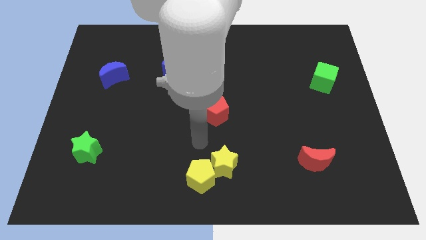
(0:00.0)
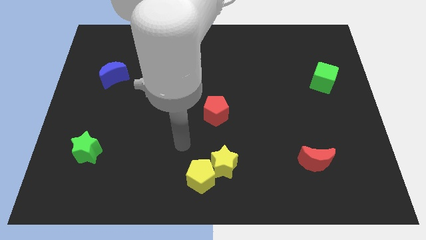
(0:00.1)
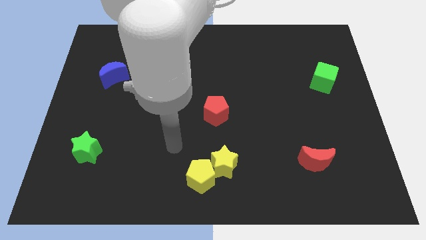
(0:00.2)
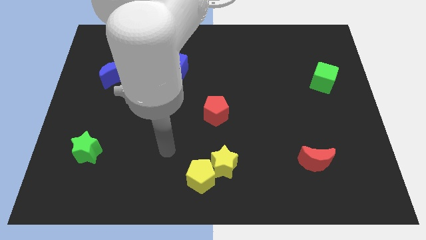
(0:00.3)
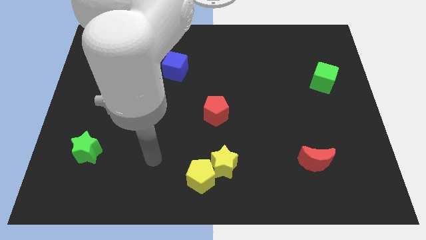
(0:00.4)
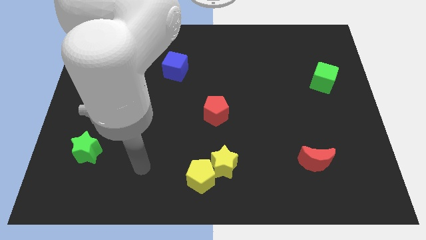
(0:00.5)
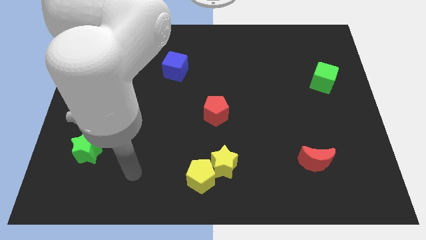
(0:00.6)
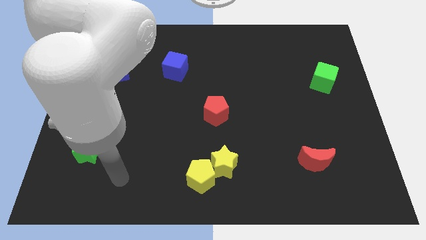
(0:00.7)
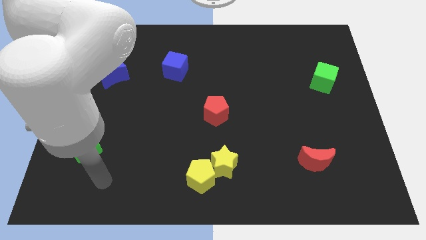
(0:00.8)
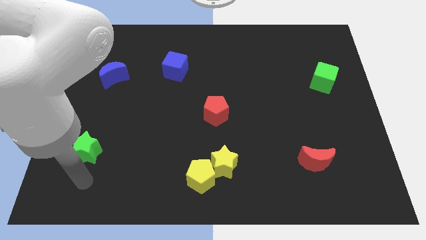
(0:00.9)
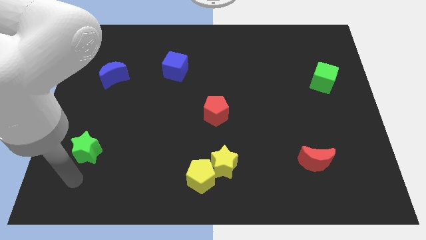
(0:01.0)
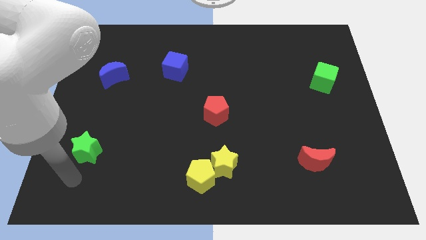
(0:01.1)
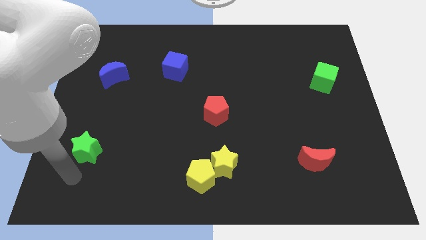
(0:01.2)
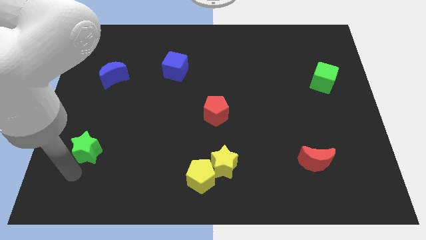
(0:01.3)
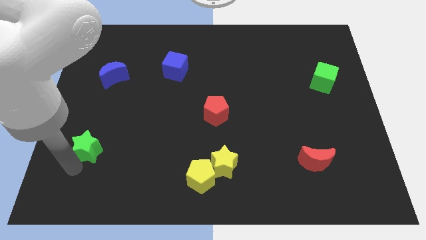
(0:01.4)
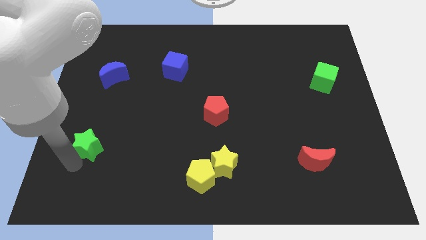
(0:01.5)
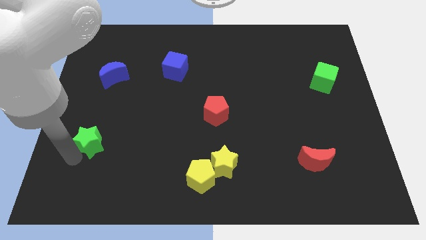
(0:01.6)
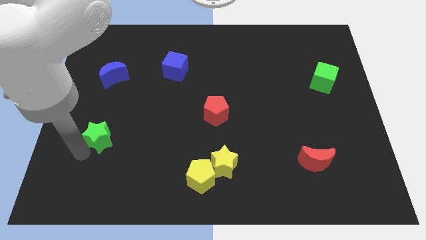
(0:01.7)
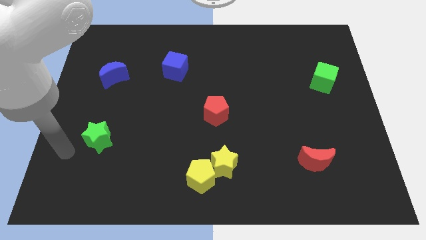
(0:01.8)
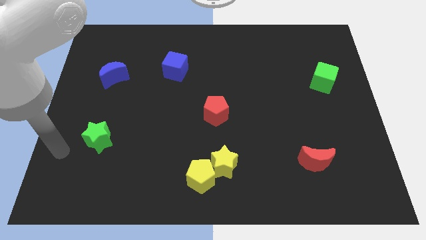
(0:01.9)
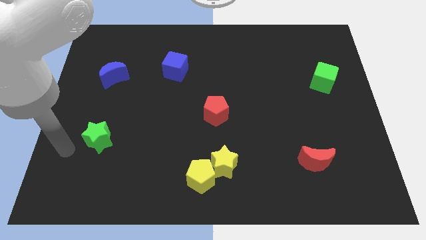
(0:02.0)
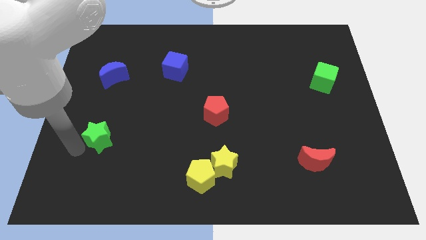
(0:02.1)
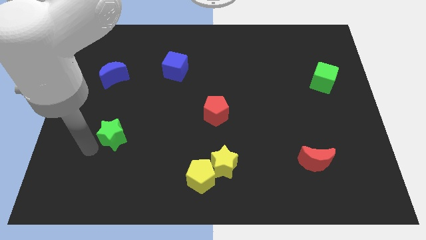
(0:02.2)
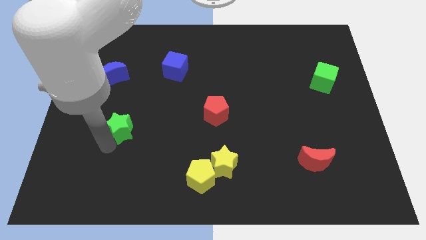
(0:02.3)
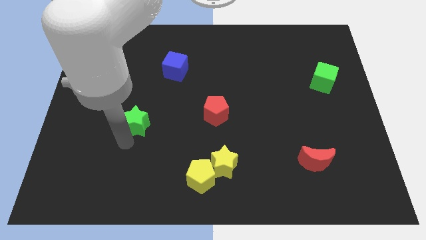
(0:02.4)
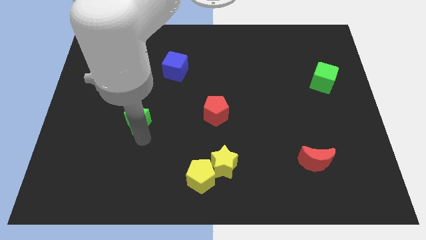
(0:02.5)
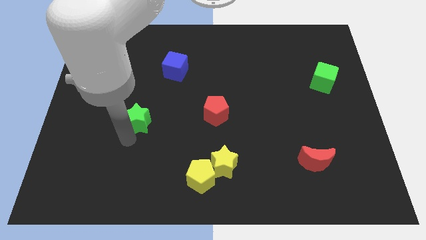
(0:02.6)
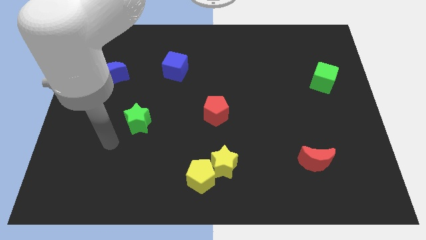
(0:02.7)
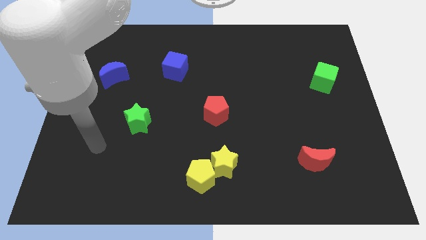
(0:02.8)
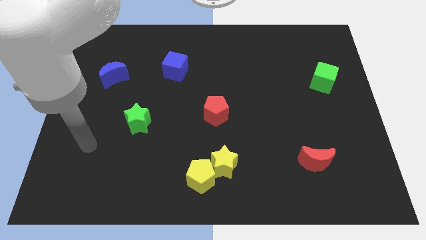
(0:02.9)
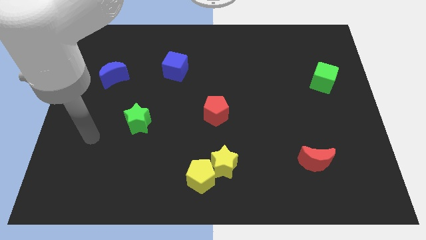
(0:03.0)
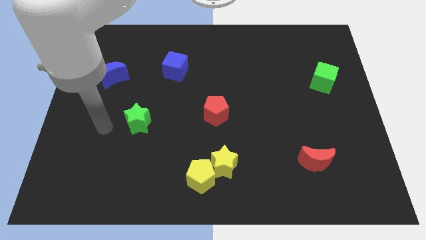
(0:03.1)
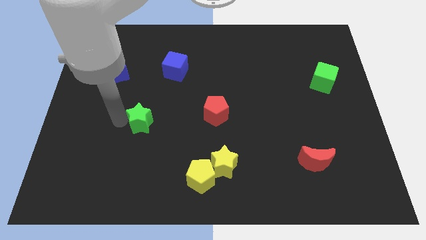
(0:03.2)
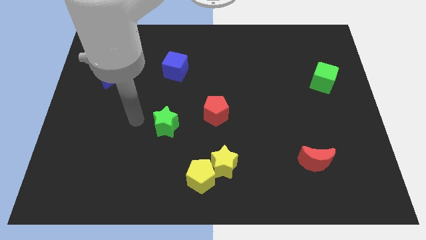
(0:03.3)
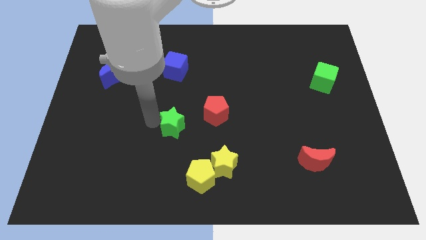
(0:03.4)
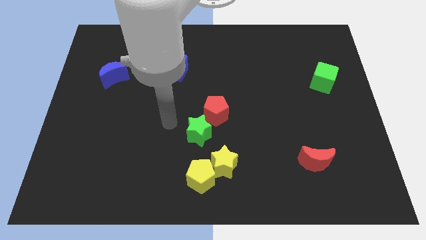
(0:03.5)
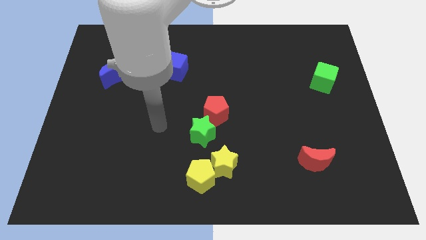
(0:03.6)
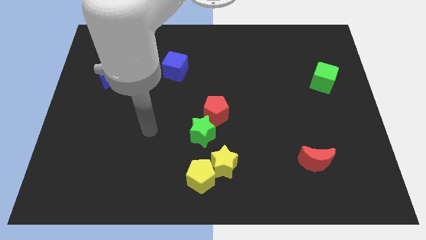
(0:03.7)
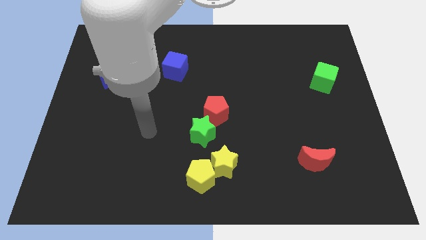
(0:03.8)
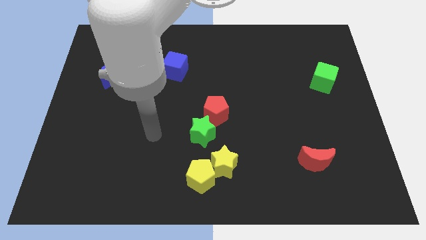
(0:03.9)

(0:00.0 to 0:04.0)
put the green star vertically above the yellow pentagon

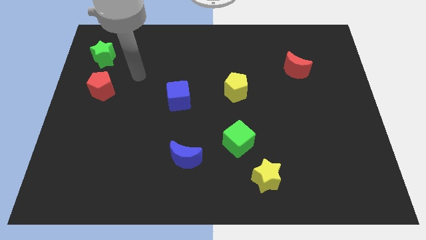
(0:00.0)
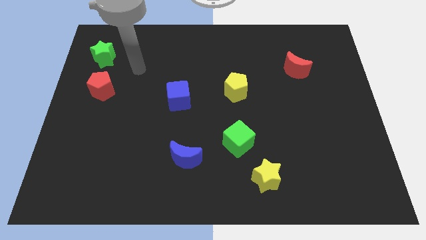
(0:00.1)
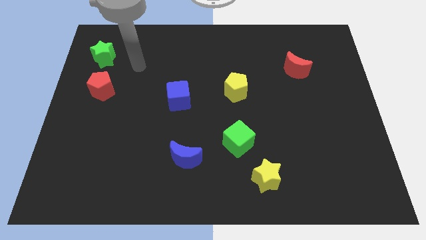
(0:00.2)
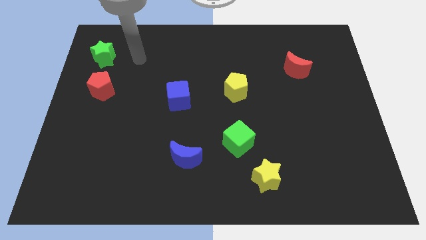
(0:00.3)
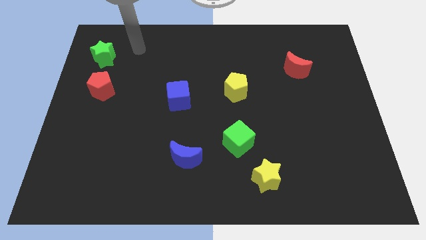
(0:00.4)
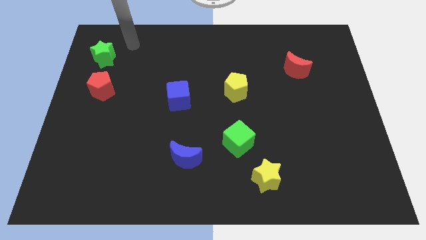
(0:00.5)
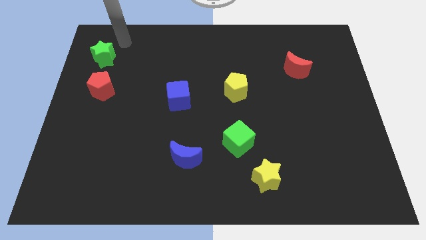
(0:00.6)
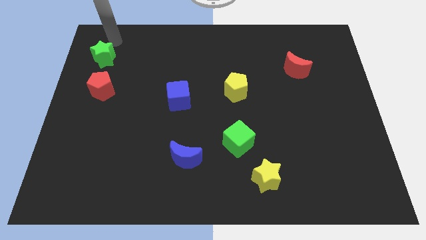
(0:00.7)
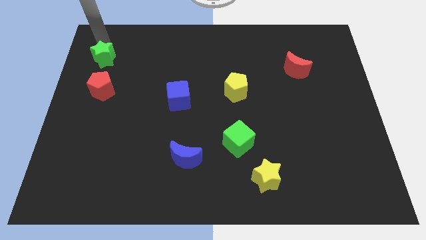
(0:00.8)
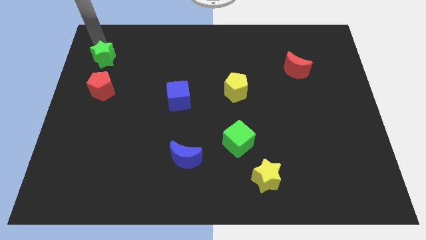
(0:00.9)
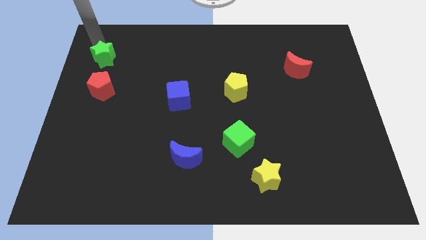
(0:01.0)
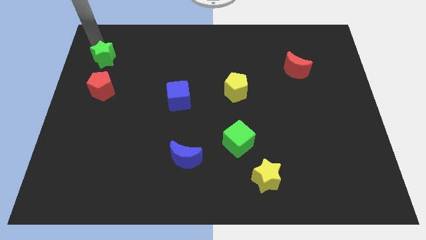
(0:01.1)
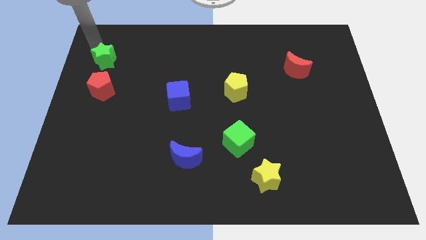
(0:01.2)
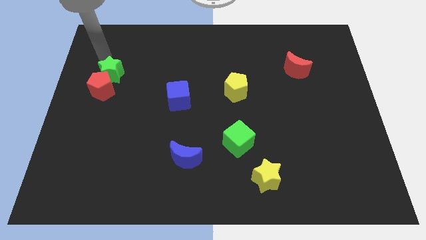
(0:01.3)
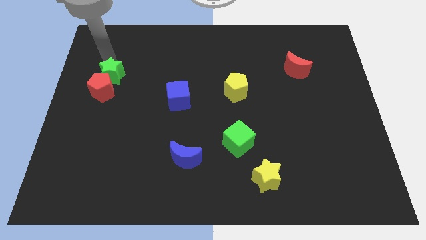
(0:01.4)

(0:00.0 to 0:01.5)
push the green star into the top side of the red pentagon

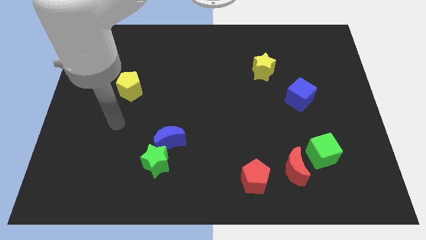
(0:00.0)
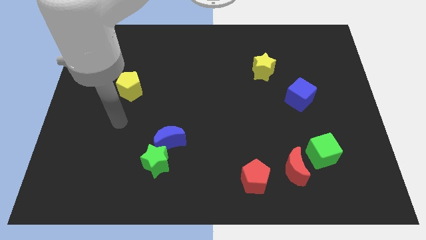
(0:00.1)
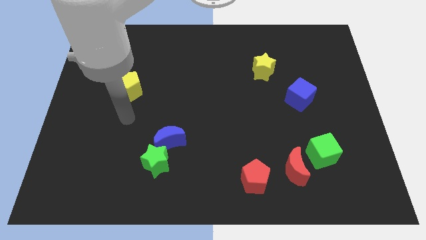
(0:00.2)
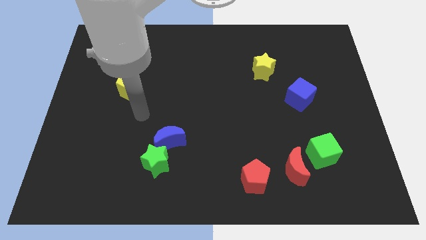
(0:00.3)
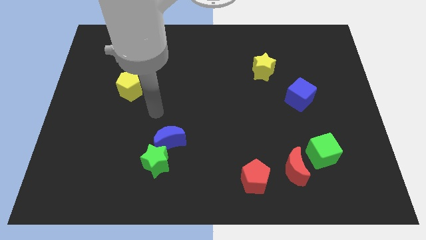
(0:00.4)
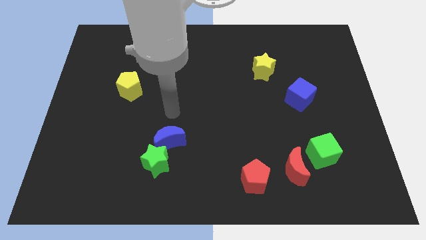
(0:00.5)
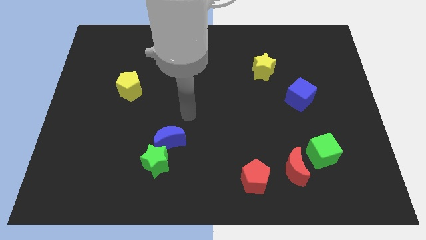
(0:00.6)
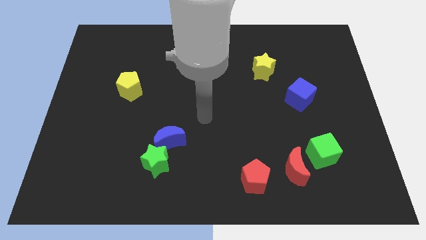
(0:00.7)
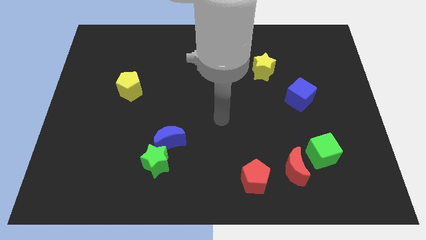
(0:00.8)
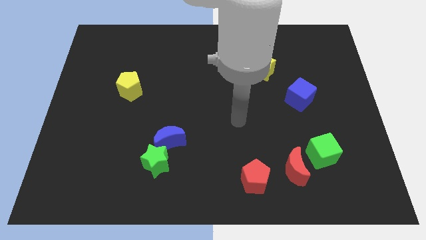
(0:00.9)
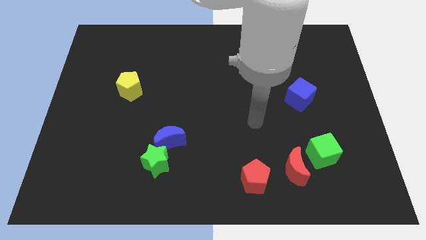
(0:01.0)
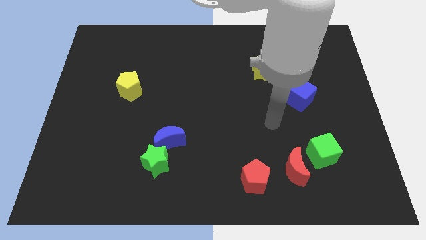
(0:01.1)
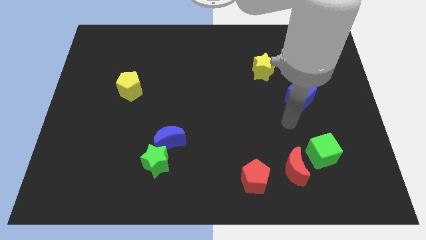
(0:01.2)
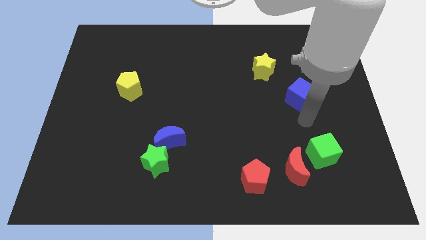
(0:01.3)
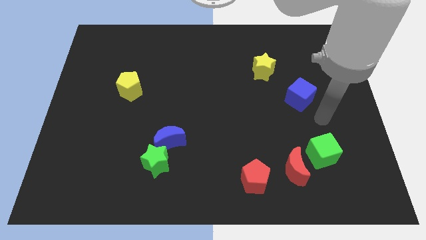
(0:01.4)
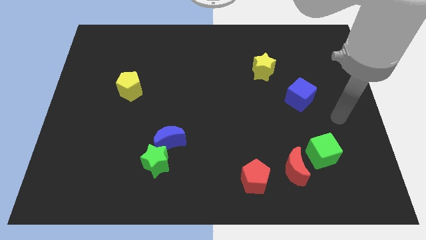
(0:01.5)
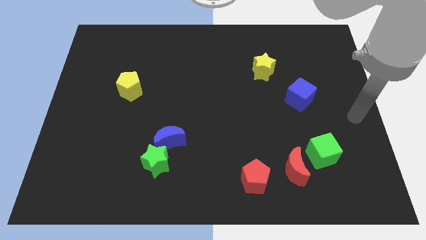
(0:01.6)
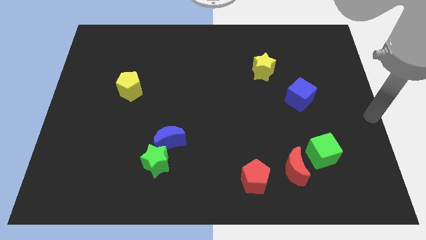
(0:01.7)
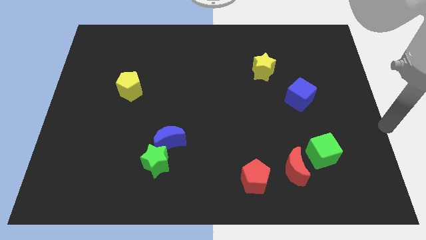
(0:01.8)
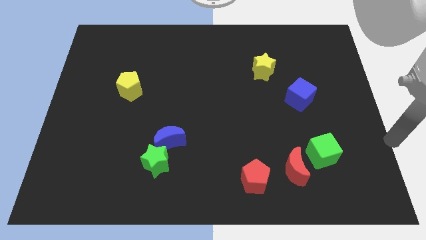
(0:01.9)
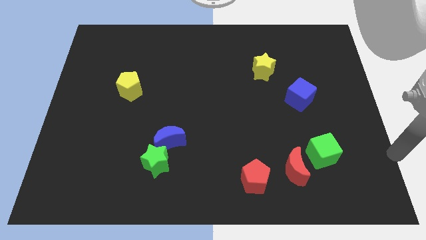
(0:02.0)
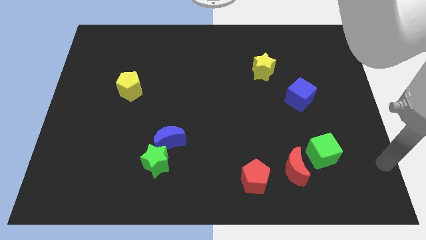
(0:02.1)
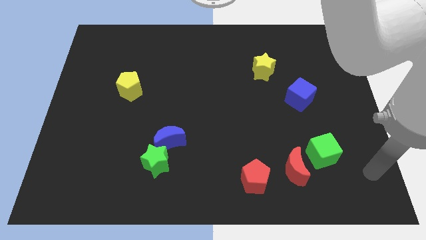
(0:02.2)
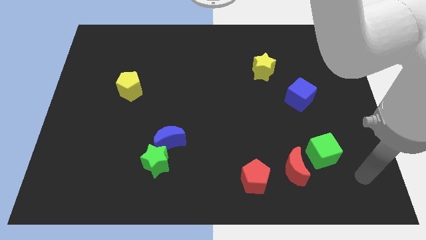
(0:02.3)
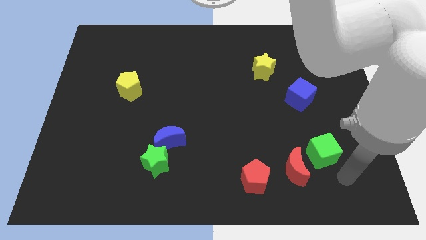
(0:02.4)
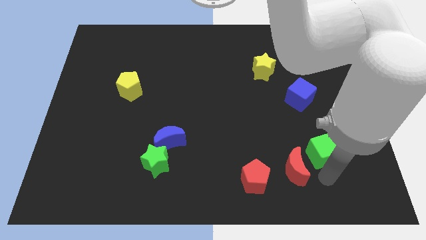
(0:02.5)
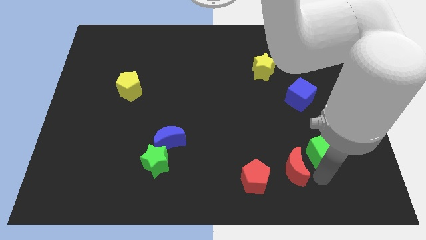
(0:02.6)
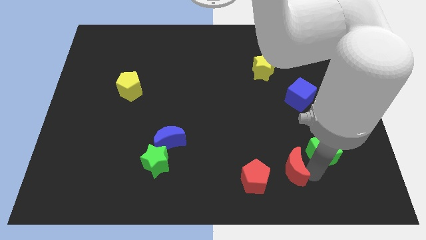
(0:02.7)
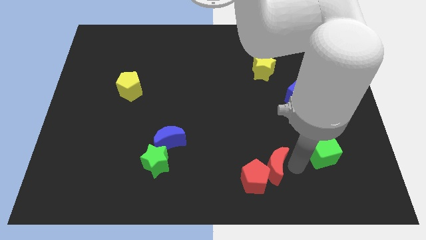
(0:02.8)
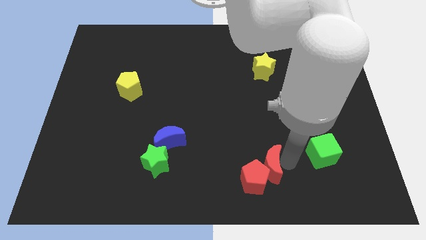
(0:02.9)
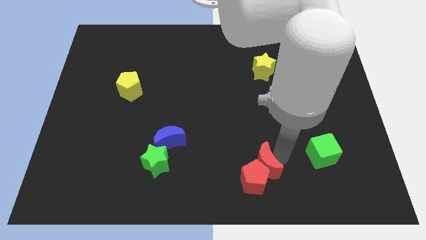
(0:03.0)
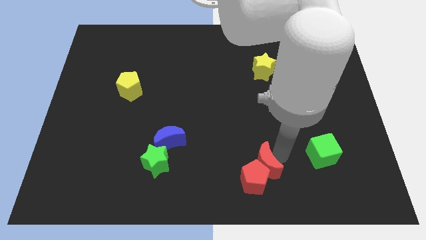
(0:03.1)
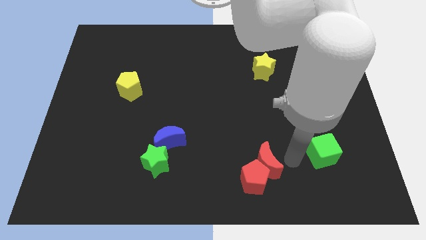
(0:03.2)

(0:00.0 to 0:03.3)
push the red moon into the red pentagon

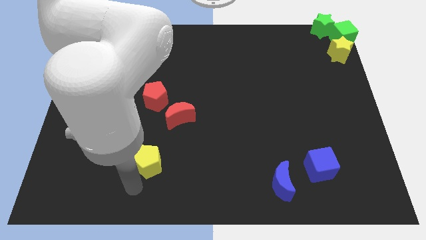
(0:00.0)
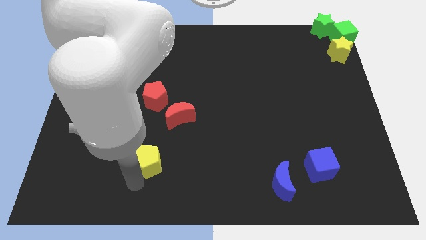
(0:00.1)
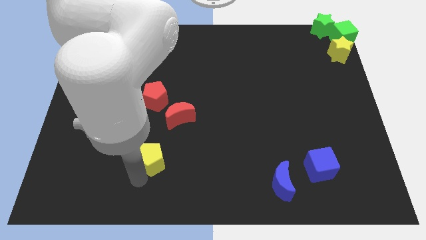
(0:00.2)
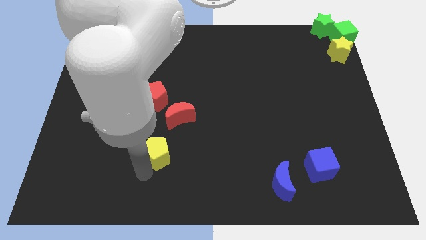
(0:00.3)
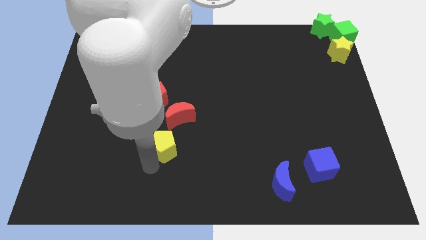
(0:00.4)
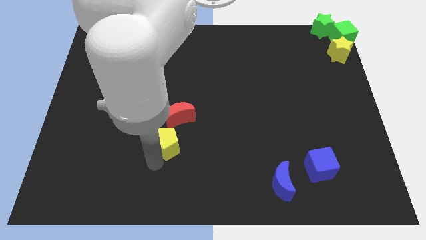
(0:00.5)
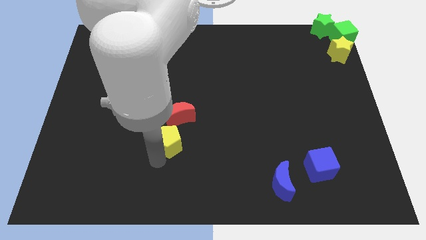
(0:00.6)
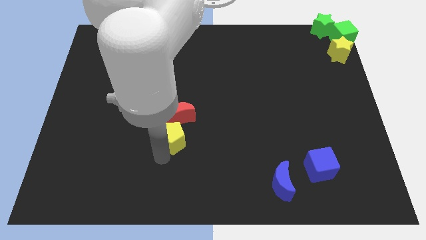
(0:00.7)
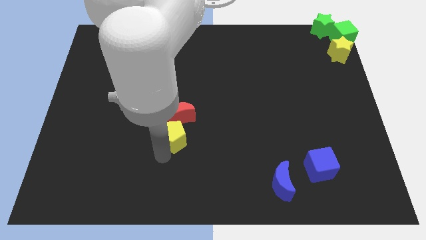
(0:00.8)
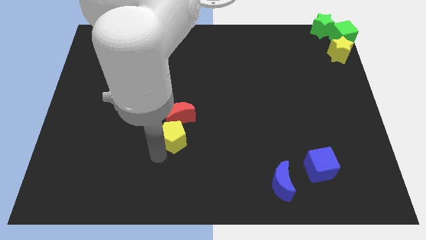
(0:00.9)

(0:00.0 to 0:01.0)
move the yellow pentagon below the red crescent
